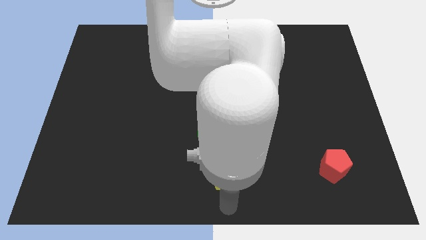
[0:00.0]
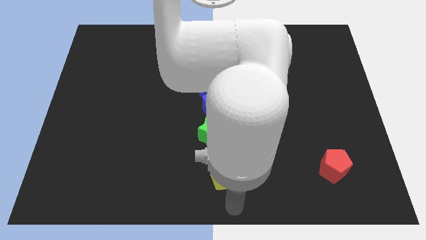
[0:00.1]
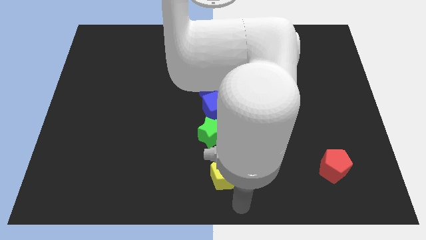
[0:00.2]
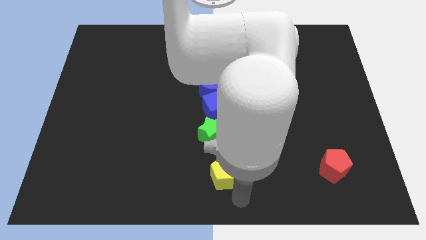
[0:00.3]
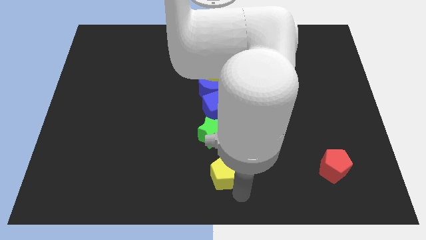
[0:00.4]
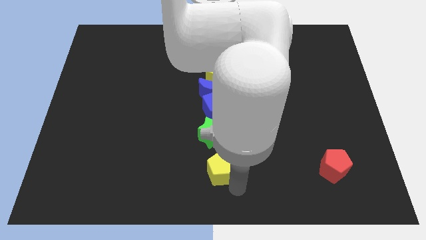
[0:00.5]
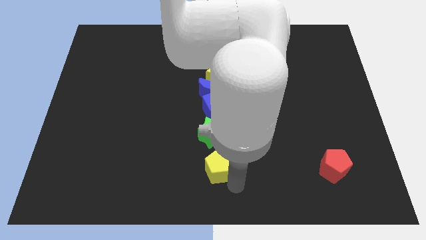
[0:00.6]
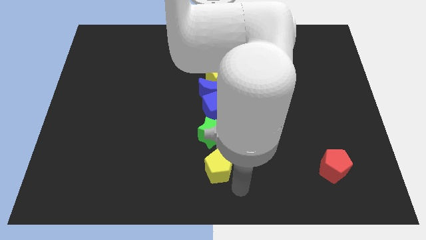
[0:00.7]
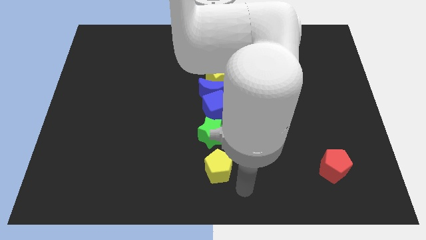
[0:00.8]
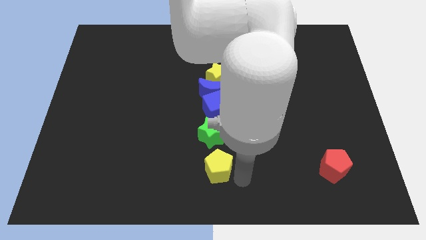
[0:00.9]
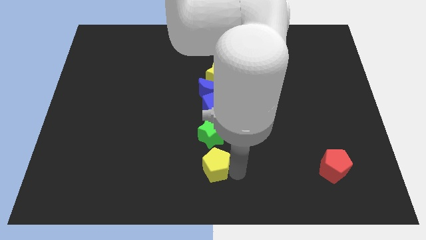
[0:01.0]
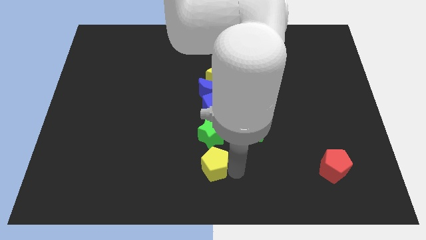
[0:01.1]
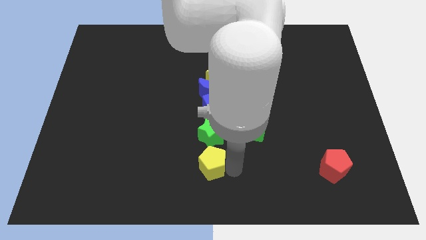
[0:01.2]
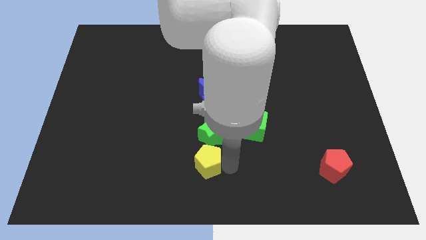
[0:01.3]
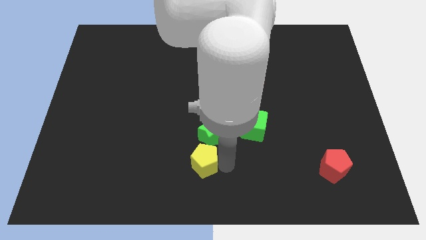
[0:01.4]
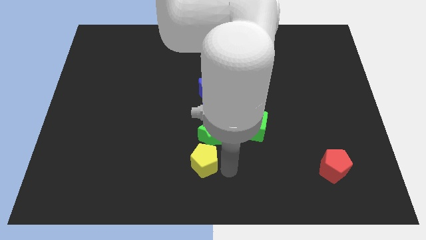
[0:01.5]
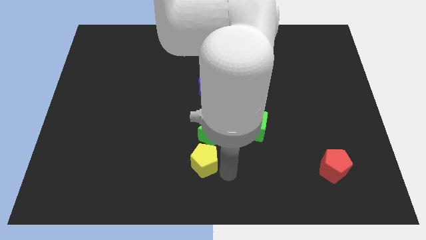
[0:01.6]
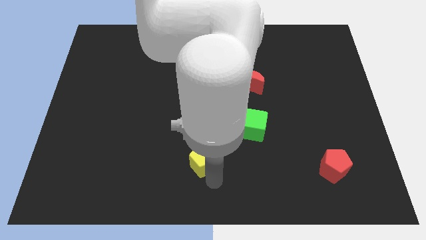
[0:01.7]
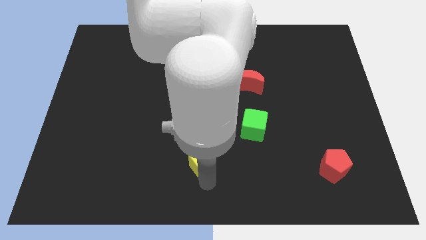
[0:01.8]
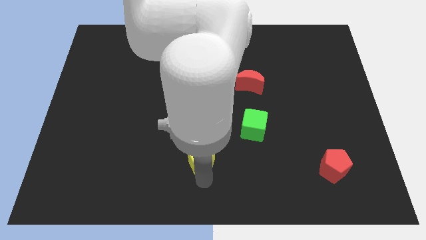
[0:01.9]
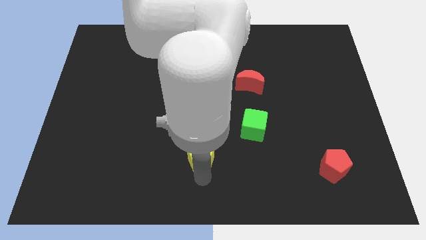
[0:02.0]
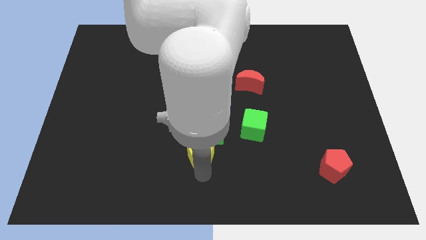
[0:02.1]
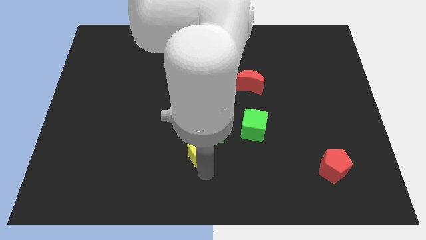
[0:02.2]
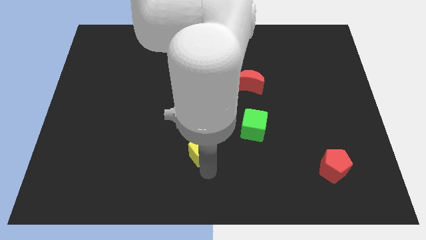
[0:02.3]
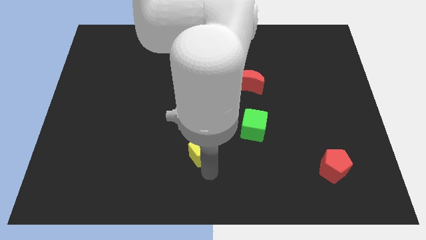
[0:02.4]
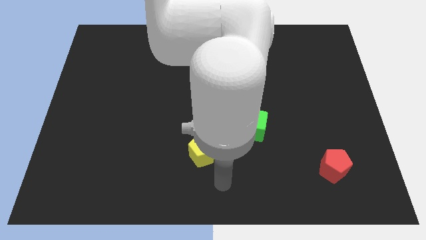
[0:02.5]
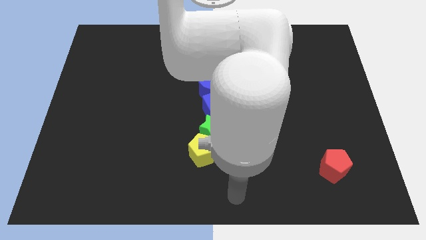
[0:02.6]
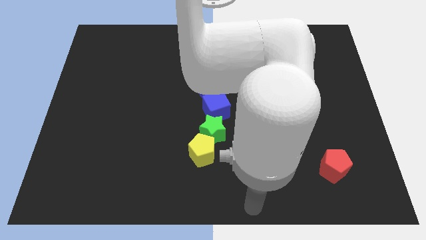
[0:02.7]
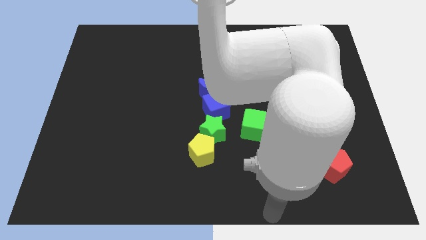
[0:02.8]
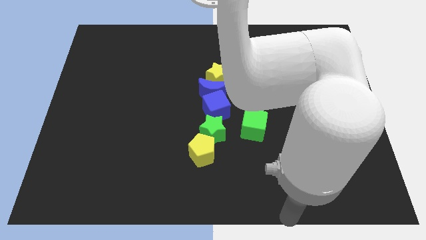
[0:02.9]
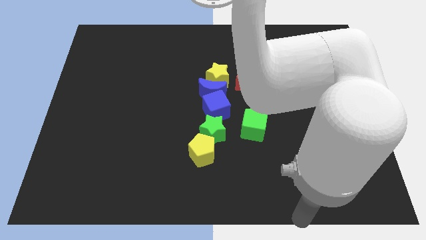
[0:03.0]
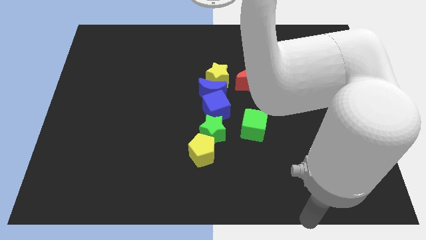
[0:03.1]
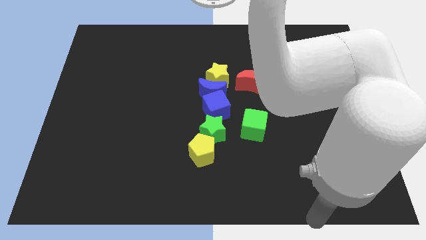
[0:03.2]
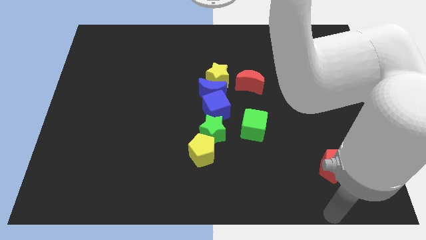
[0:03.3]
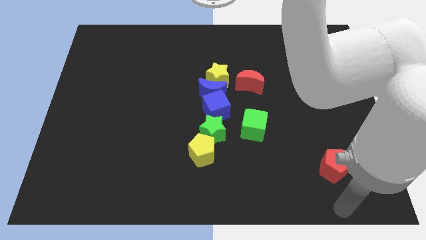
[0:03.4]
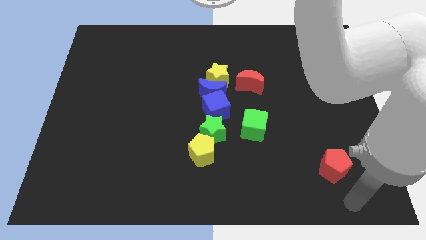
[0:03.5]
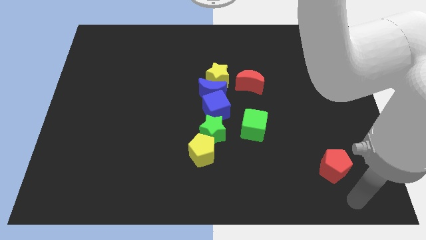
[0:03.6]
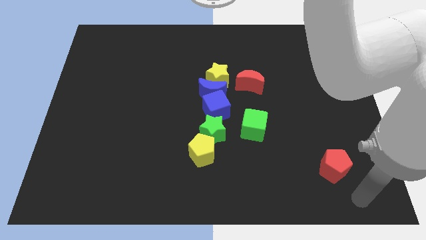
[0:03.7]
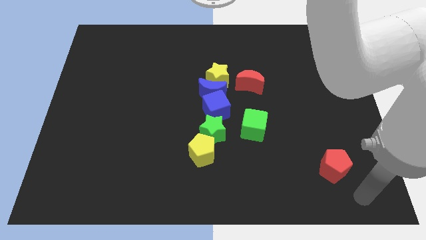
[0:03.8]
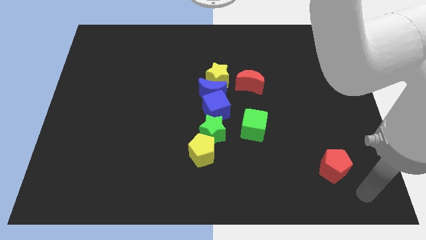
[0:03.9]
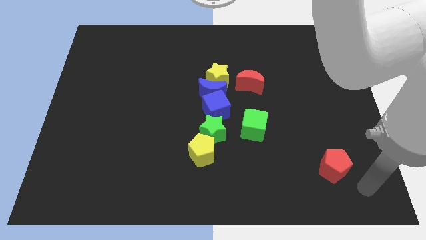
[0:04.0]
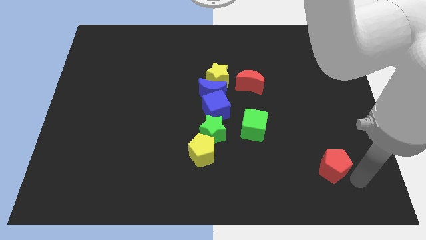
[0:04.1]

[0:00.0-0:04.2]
push the yellow pentagon close to the green cube

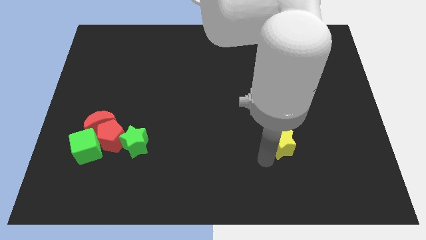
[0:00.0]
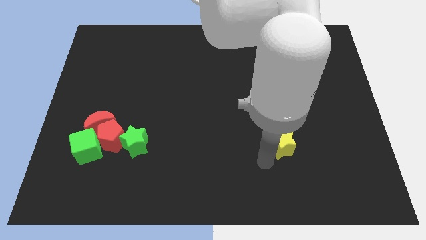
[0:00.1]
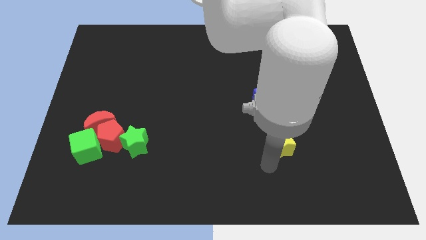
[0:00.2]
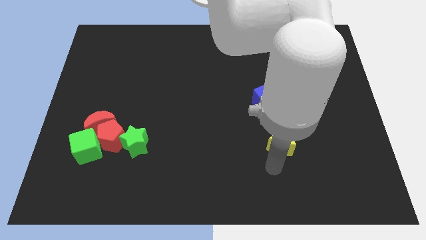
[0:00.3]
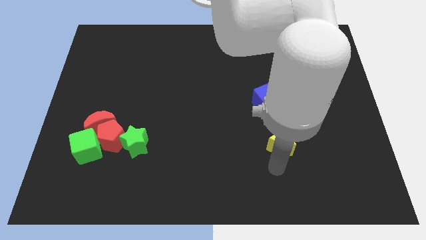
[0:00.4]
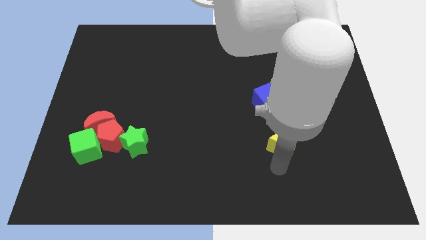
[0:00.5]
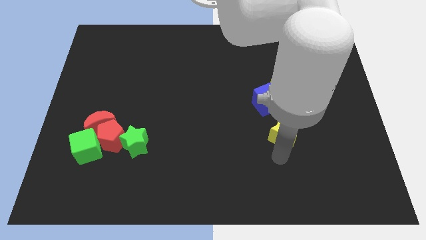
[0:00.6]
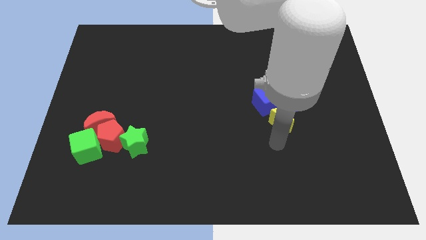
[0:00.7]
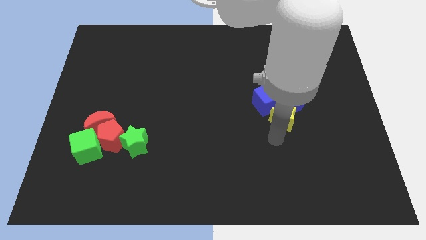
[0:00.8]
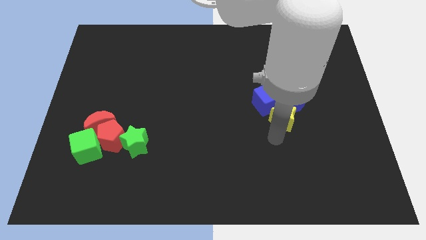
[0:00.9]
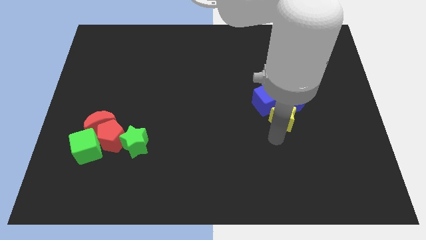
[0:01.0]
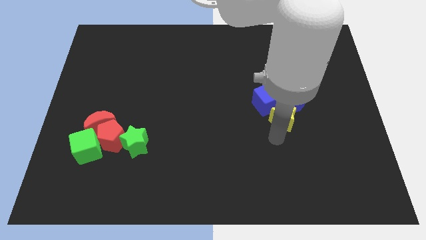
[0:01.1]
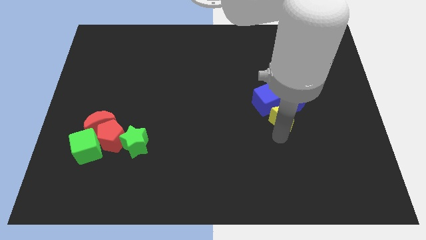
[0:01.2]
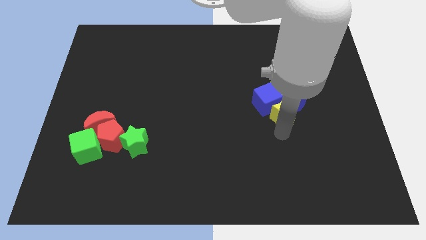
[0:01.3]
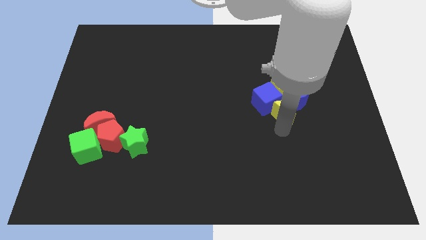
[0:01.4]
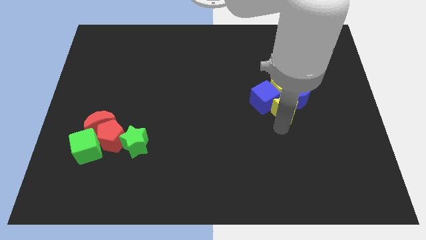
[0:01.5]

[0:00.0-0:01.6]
push the yellow star to the bottom of the yellow pentagon

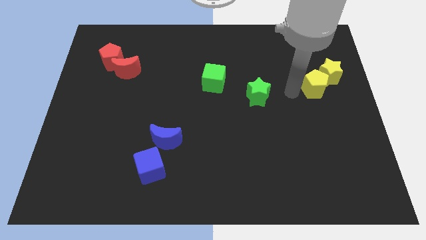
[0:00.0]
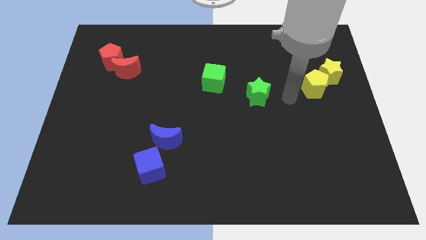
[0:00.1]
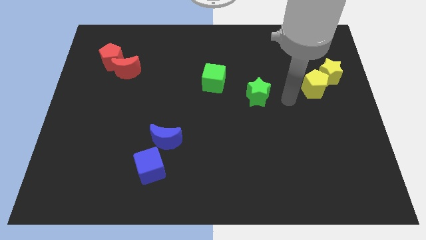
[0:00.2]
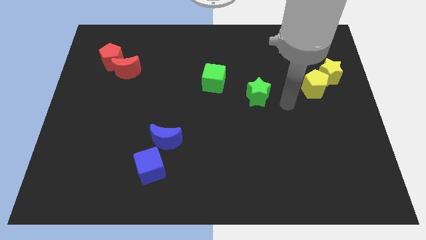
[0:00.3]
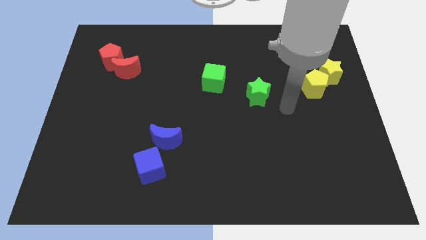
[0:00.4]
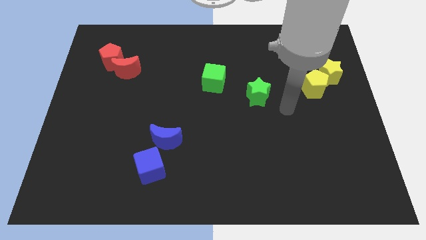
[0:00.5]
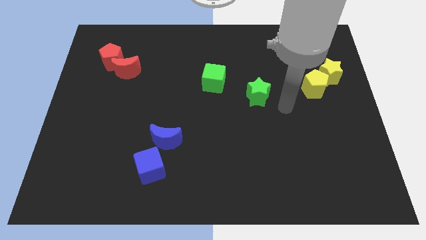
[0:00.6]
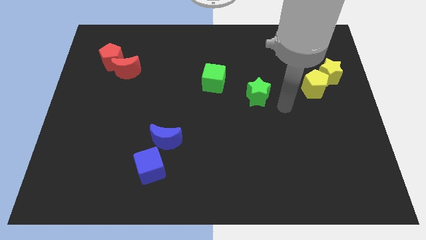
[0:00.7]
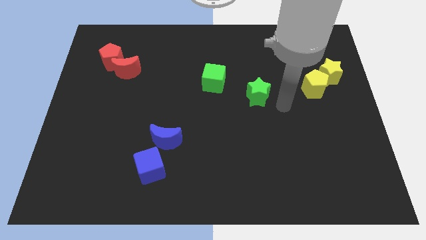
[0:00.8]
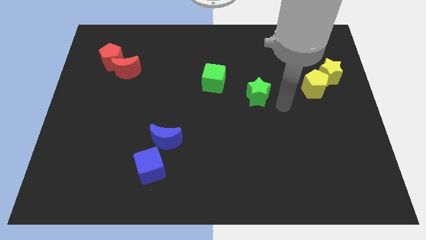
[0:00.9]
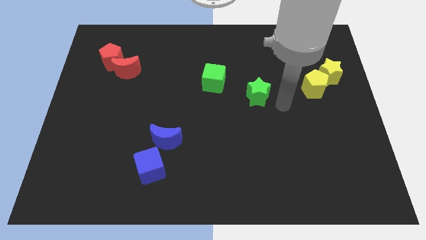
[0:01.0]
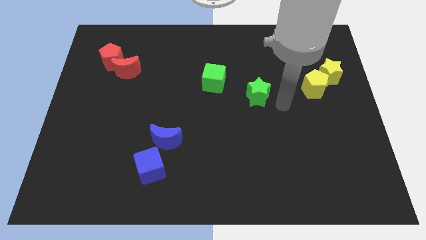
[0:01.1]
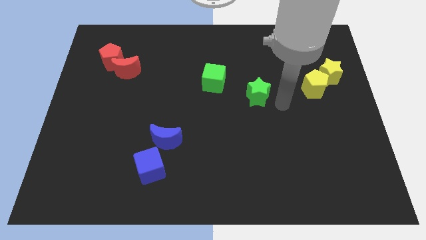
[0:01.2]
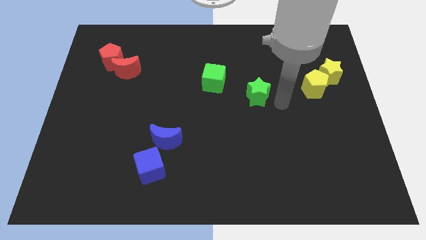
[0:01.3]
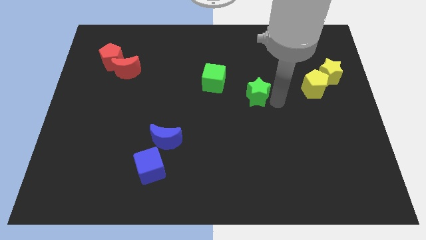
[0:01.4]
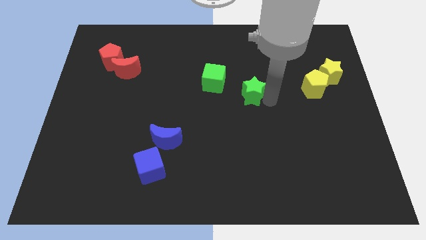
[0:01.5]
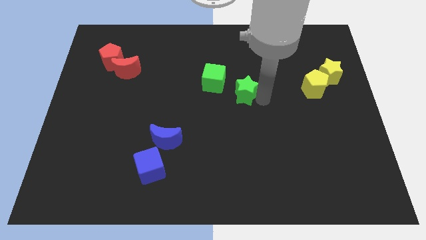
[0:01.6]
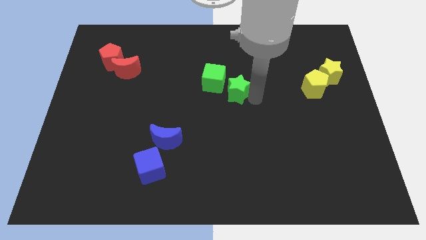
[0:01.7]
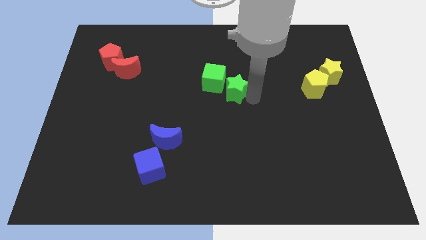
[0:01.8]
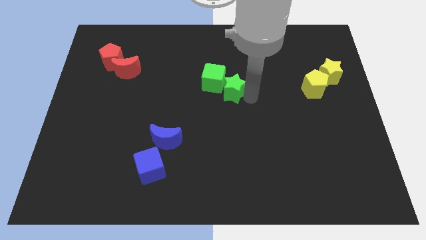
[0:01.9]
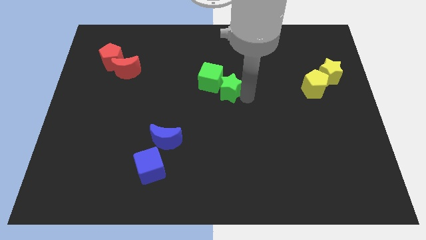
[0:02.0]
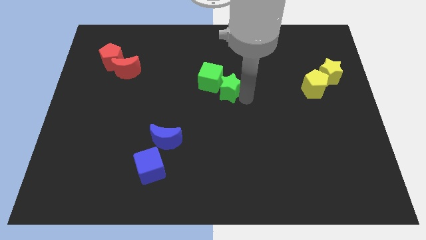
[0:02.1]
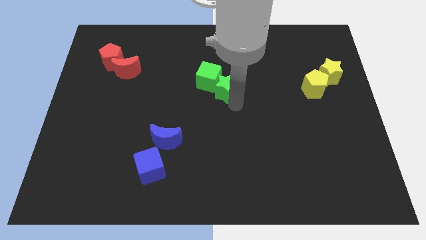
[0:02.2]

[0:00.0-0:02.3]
move the green star into the green cube

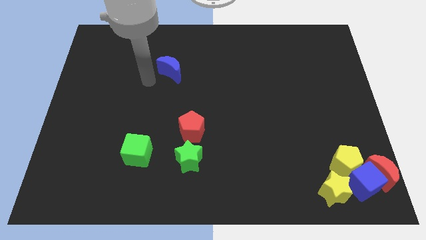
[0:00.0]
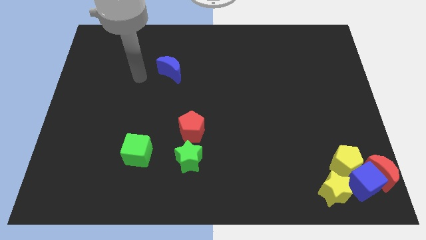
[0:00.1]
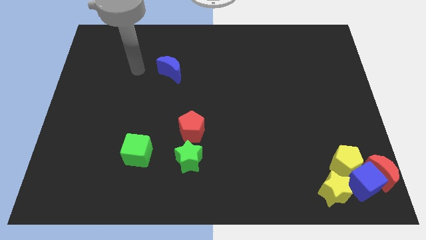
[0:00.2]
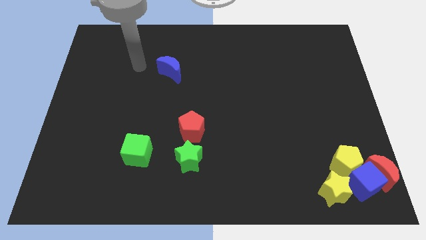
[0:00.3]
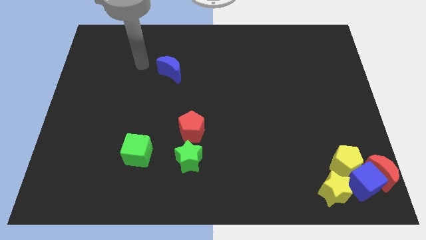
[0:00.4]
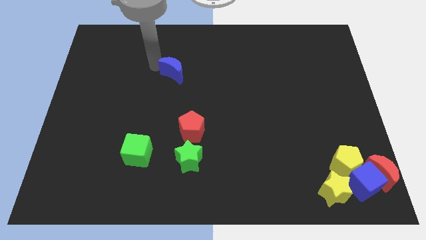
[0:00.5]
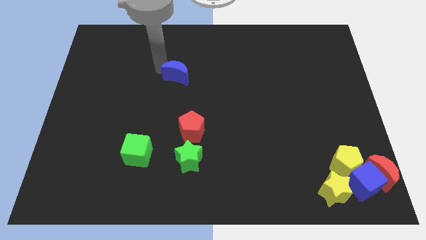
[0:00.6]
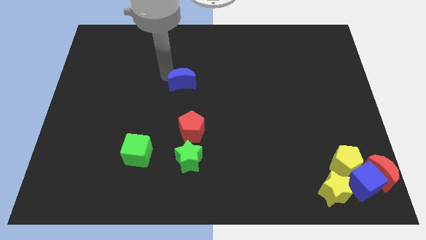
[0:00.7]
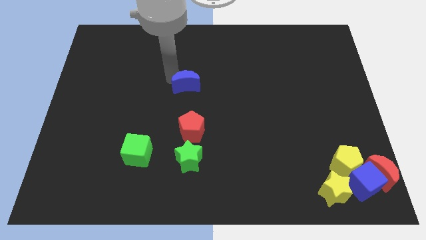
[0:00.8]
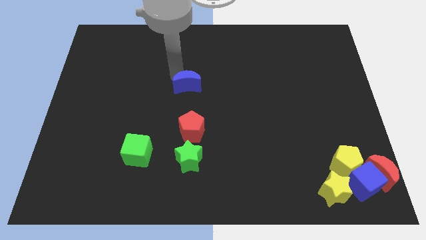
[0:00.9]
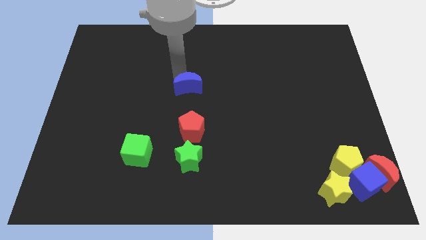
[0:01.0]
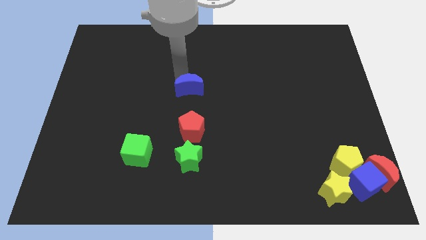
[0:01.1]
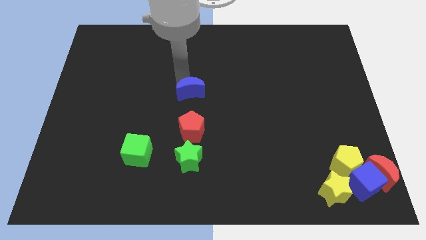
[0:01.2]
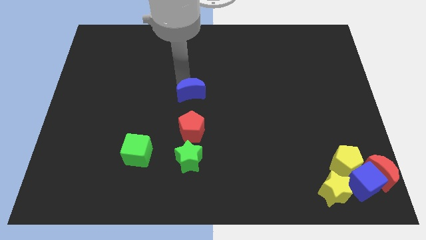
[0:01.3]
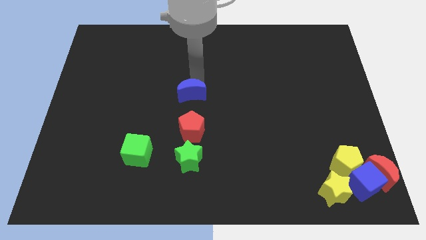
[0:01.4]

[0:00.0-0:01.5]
slide the blue moon vertically above the red pentagon
